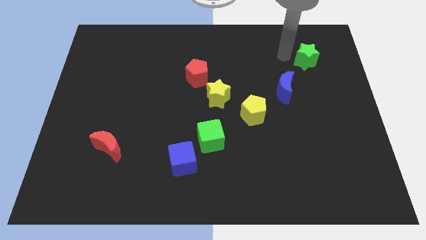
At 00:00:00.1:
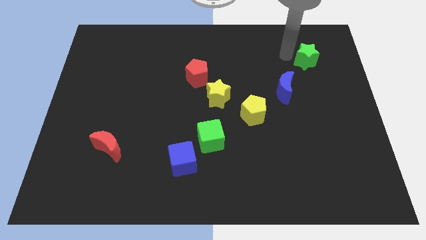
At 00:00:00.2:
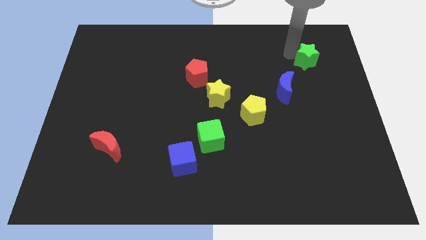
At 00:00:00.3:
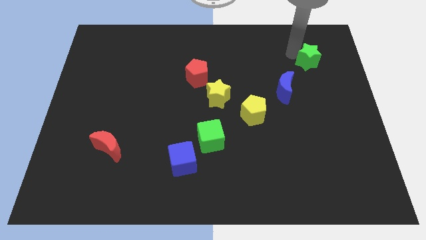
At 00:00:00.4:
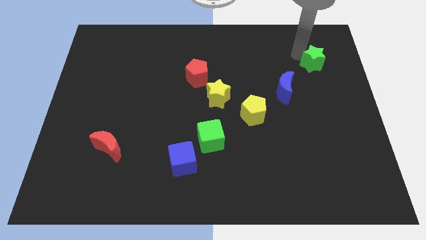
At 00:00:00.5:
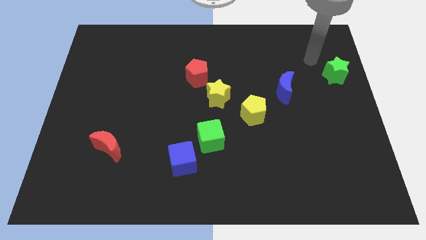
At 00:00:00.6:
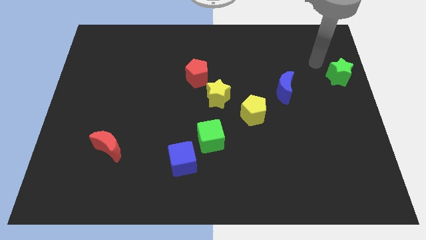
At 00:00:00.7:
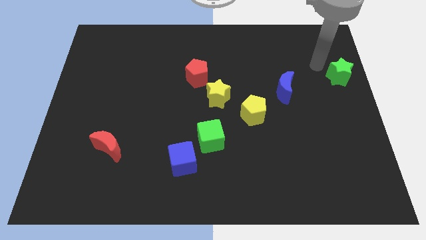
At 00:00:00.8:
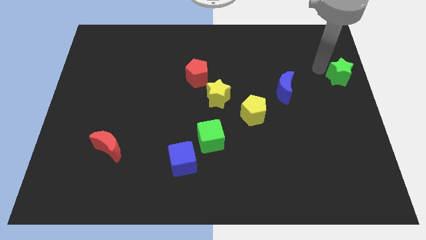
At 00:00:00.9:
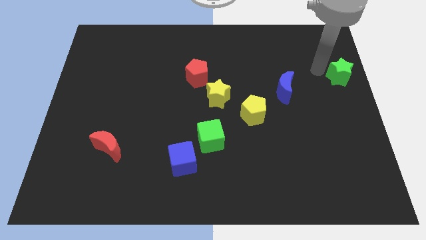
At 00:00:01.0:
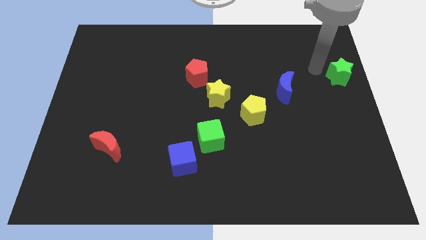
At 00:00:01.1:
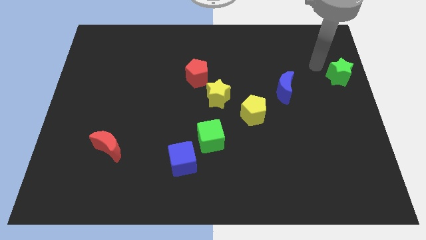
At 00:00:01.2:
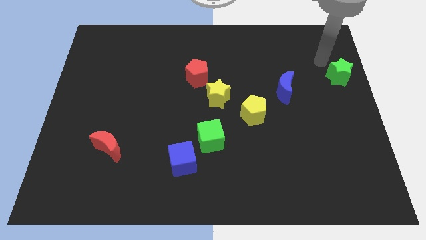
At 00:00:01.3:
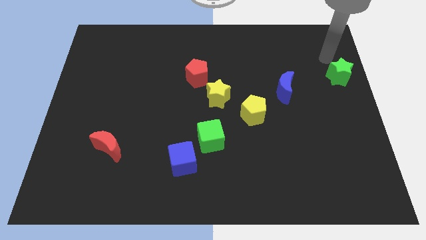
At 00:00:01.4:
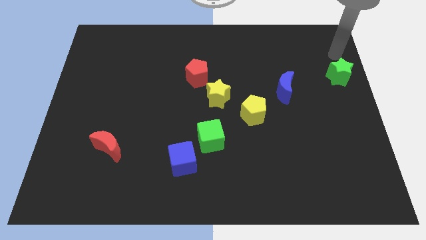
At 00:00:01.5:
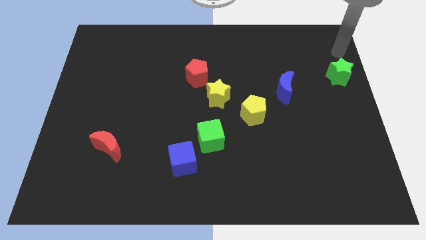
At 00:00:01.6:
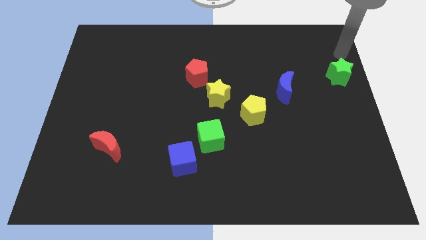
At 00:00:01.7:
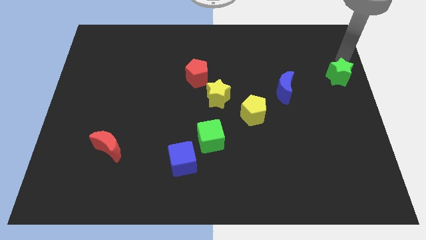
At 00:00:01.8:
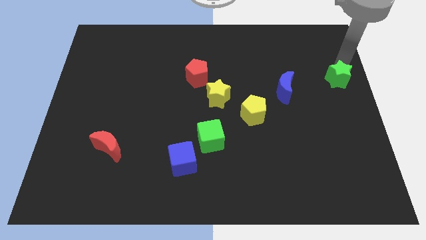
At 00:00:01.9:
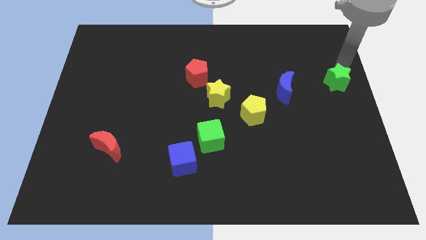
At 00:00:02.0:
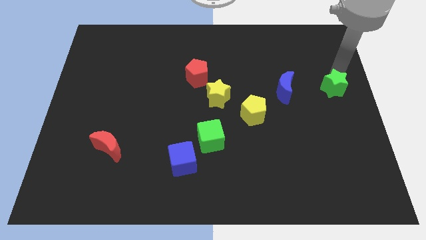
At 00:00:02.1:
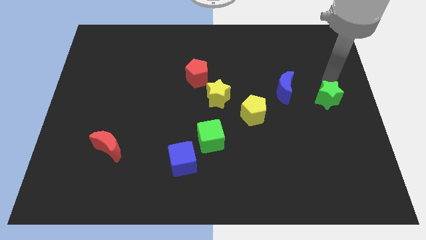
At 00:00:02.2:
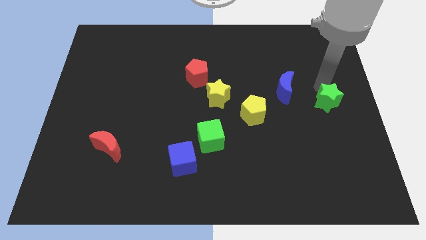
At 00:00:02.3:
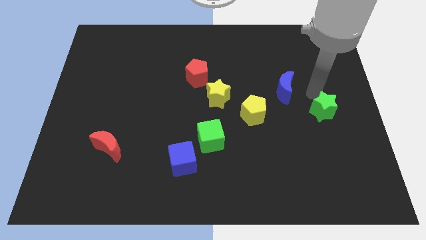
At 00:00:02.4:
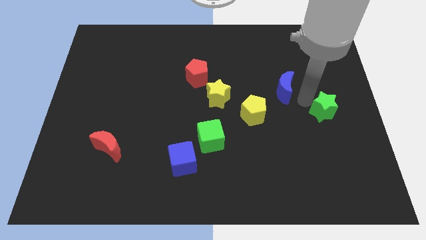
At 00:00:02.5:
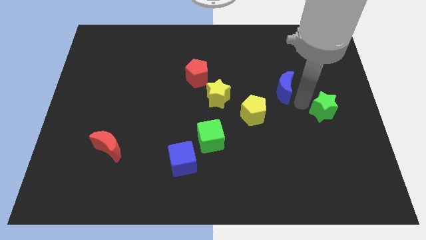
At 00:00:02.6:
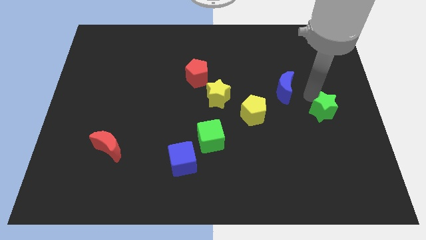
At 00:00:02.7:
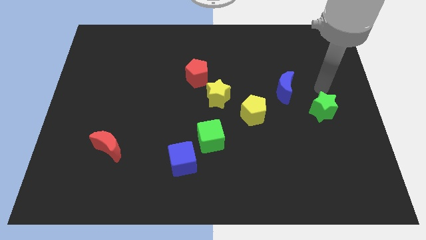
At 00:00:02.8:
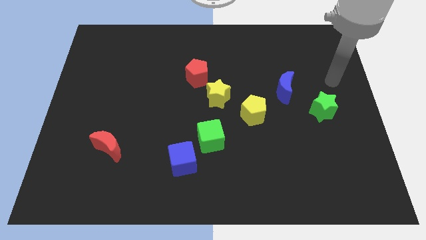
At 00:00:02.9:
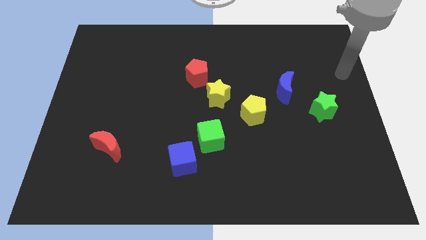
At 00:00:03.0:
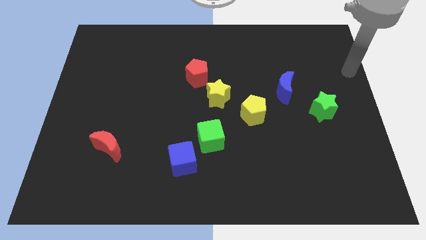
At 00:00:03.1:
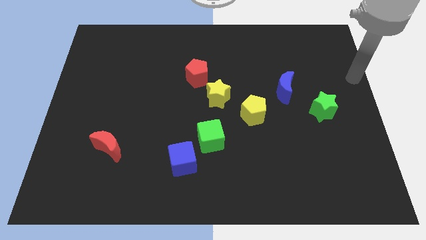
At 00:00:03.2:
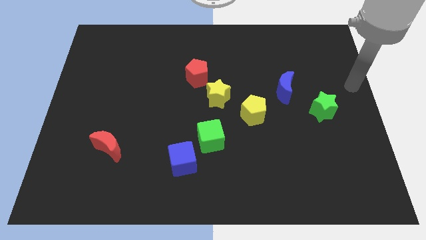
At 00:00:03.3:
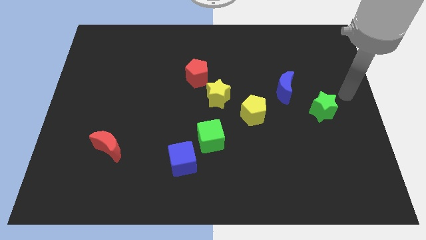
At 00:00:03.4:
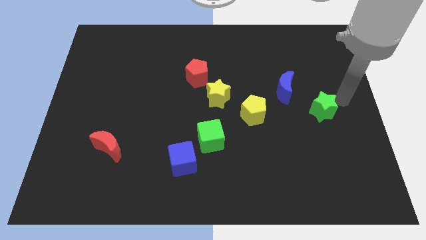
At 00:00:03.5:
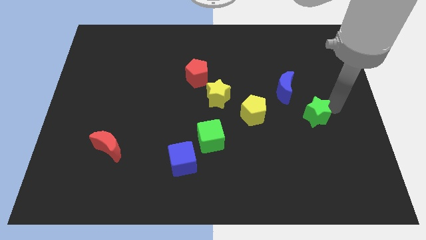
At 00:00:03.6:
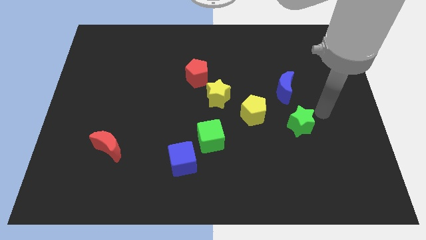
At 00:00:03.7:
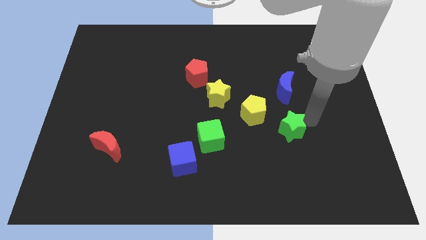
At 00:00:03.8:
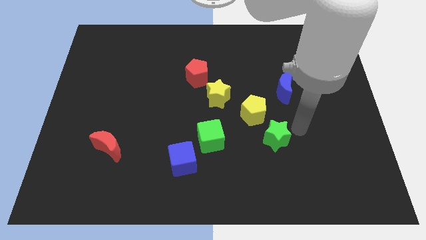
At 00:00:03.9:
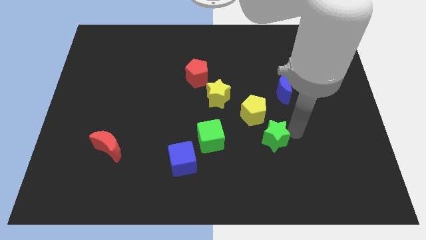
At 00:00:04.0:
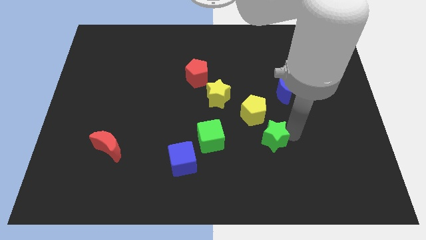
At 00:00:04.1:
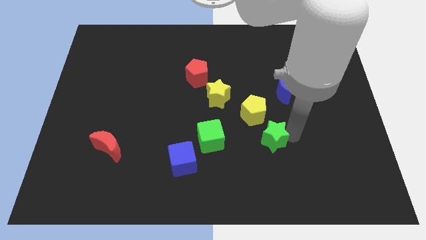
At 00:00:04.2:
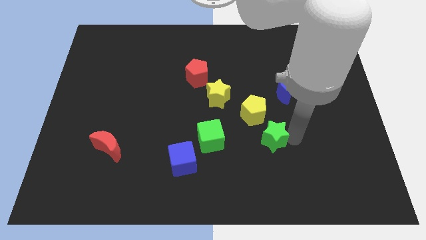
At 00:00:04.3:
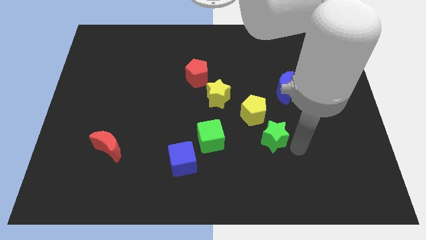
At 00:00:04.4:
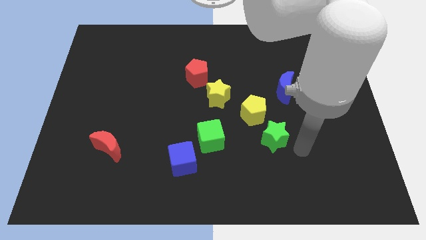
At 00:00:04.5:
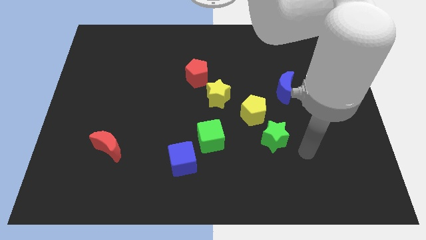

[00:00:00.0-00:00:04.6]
place the green star right to the green cube

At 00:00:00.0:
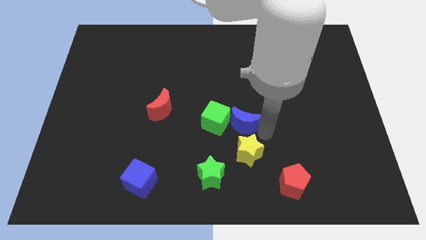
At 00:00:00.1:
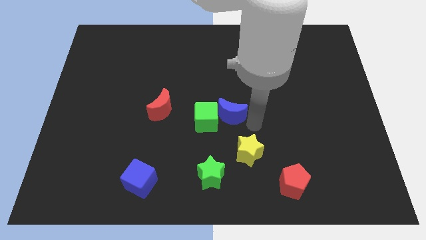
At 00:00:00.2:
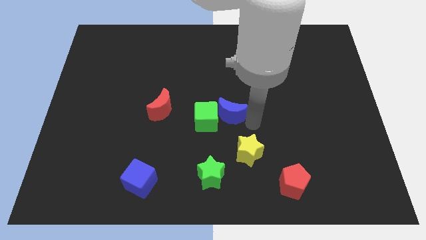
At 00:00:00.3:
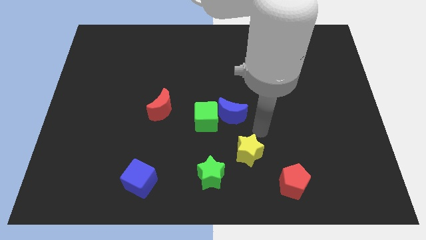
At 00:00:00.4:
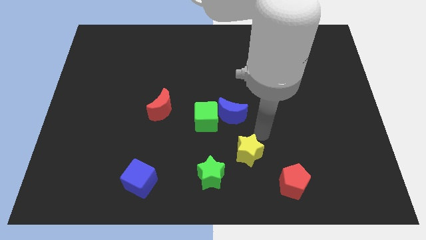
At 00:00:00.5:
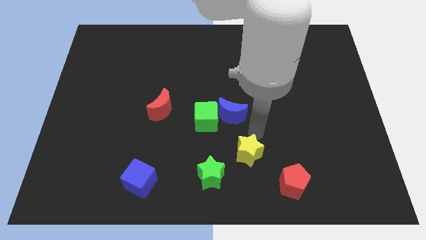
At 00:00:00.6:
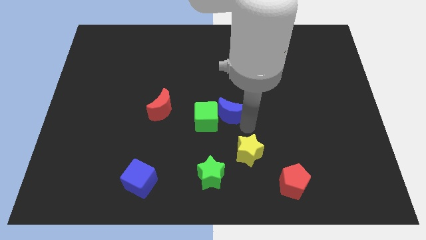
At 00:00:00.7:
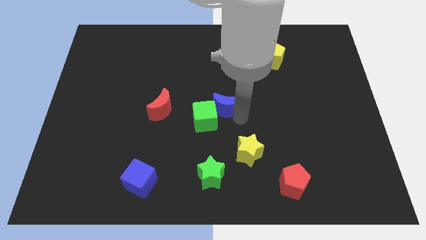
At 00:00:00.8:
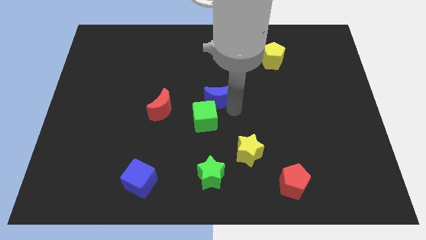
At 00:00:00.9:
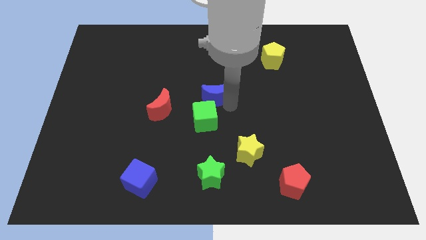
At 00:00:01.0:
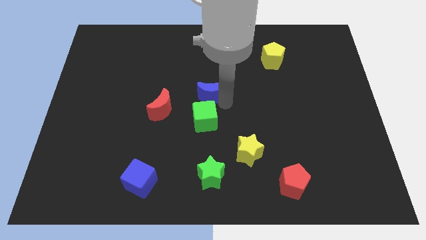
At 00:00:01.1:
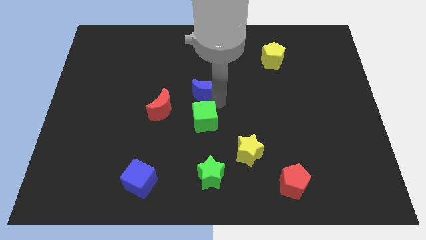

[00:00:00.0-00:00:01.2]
place the blue moon above the green cube

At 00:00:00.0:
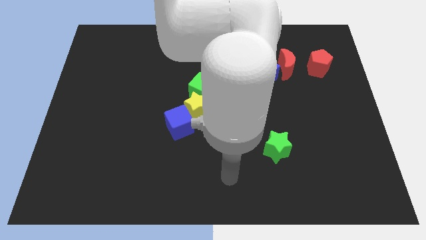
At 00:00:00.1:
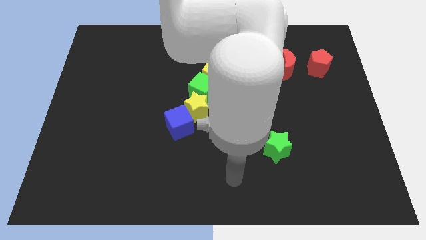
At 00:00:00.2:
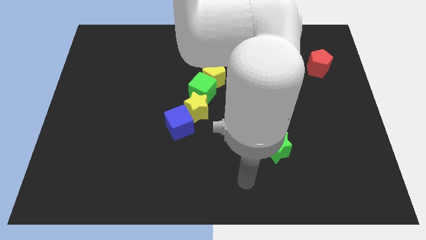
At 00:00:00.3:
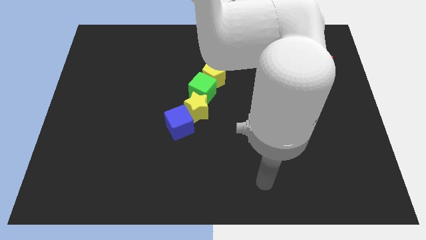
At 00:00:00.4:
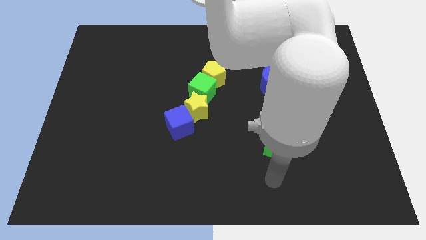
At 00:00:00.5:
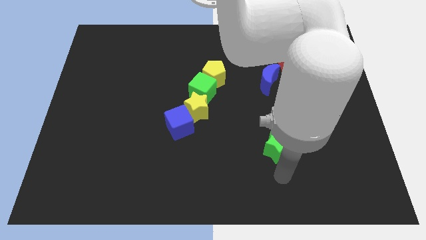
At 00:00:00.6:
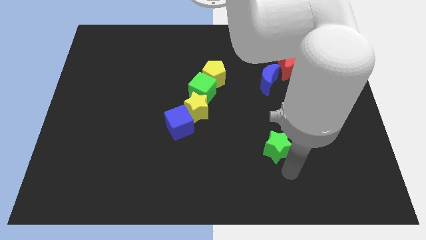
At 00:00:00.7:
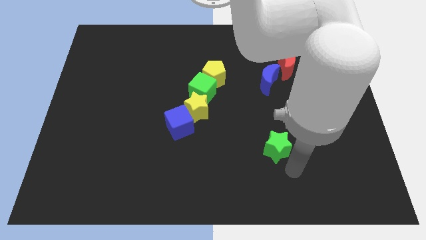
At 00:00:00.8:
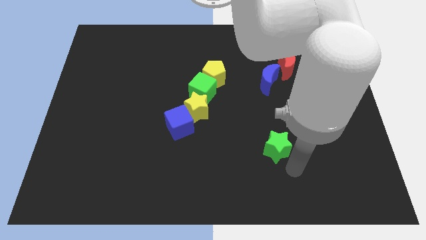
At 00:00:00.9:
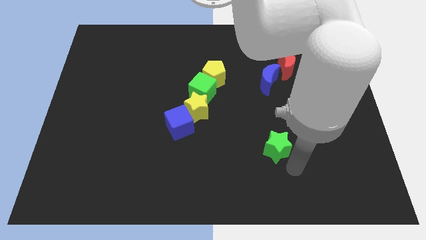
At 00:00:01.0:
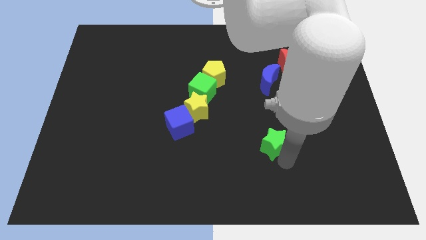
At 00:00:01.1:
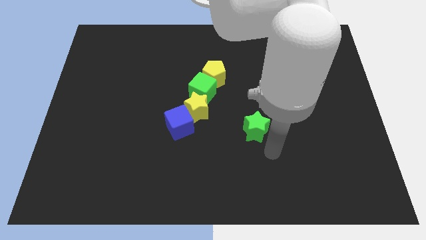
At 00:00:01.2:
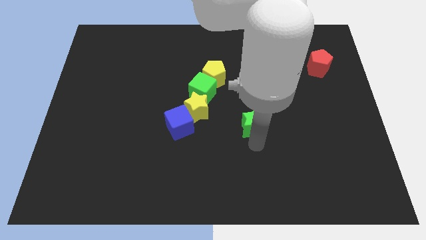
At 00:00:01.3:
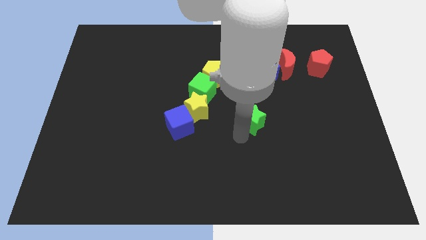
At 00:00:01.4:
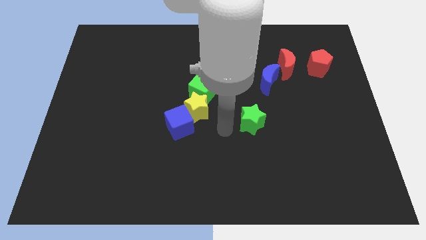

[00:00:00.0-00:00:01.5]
place the green star diagonally to green cube

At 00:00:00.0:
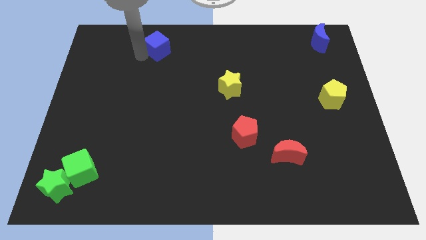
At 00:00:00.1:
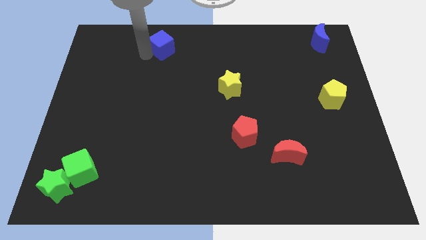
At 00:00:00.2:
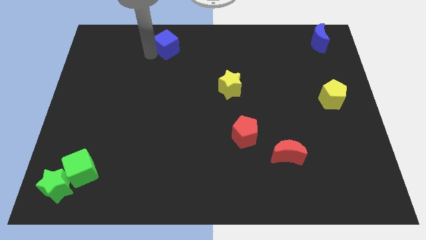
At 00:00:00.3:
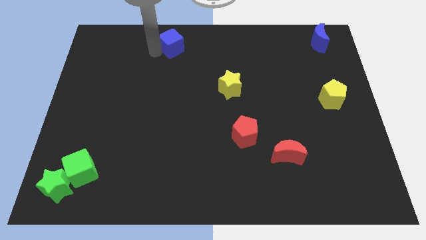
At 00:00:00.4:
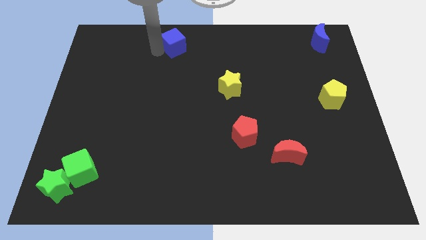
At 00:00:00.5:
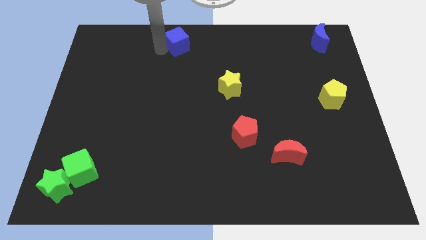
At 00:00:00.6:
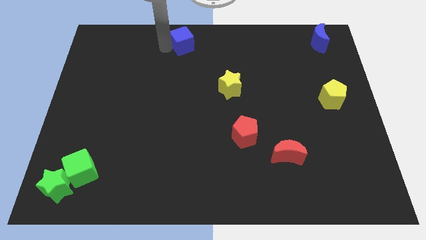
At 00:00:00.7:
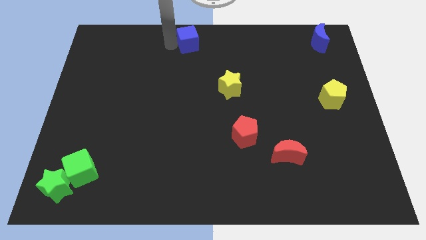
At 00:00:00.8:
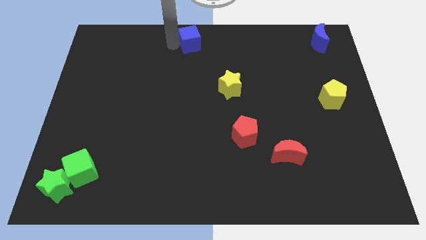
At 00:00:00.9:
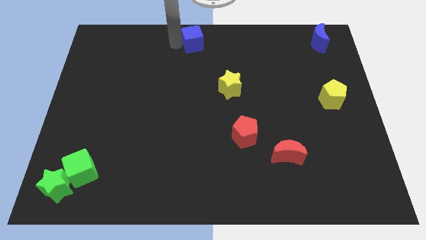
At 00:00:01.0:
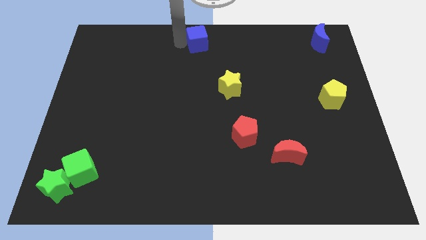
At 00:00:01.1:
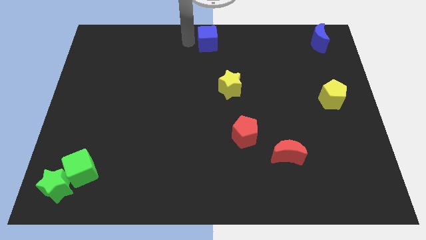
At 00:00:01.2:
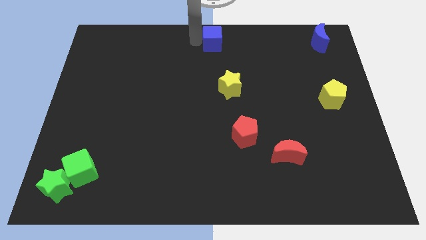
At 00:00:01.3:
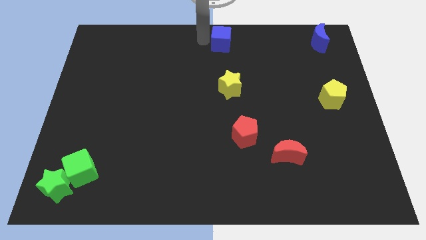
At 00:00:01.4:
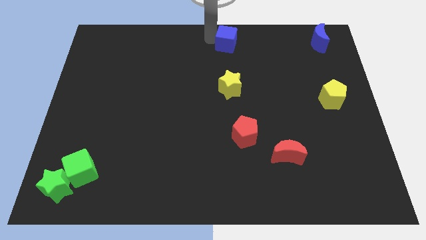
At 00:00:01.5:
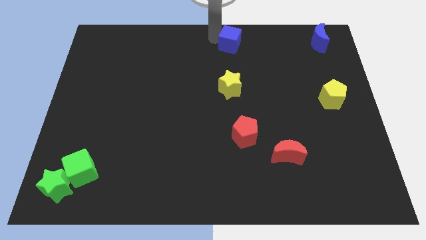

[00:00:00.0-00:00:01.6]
move the blue cube to the top side of the yellow star
